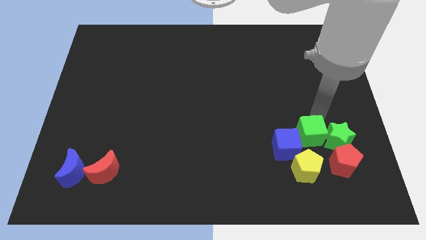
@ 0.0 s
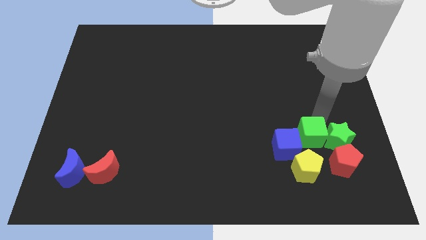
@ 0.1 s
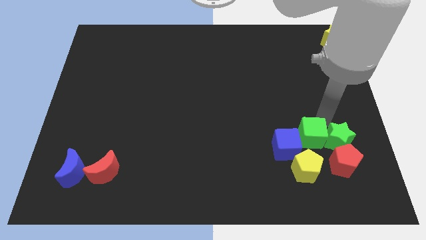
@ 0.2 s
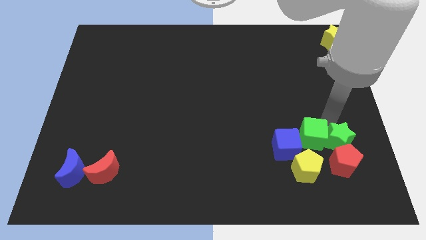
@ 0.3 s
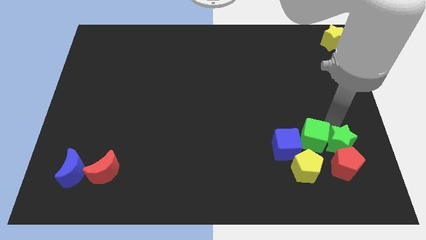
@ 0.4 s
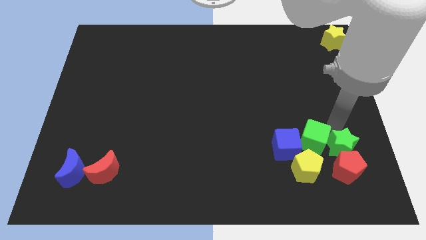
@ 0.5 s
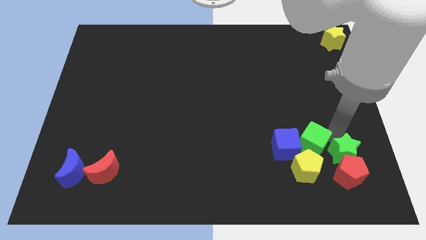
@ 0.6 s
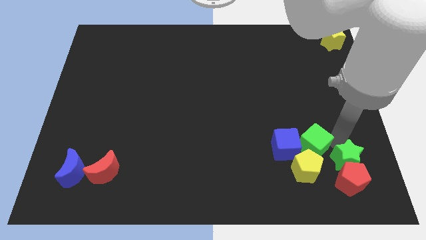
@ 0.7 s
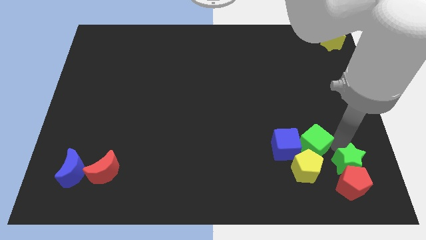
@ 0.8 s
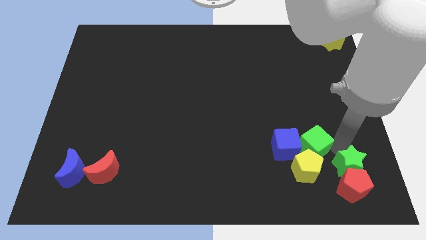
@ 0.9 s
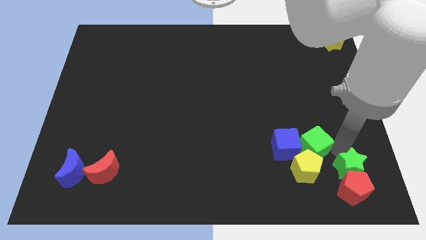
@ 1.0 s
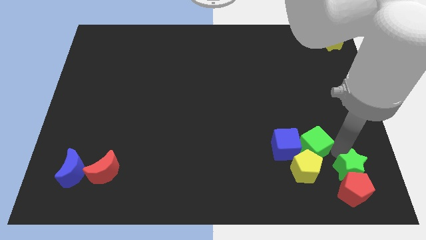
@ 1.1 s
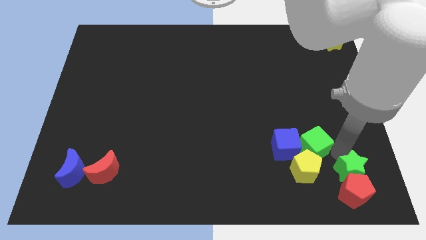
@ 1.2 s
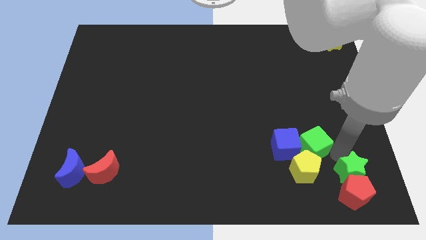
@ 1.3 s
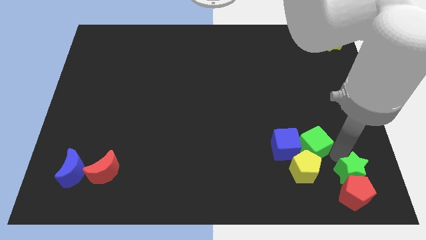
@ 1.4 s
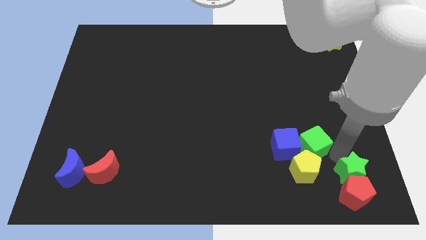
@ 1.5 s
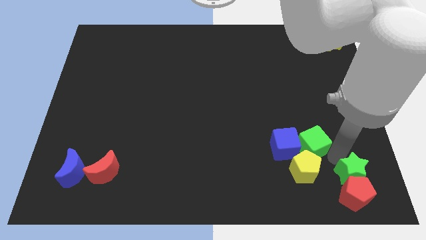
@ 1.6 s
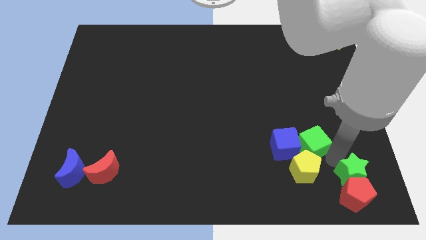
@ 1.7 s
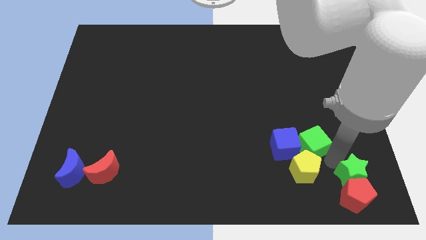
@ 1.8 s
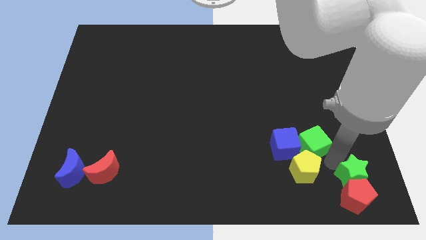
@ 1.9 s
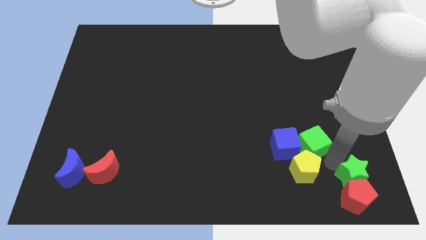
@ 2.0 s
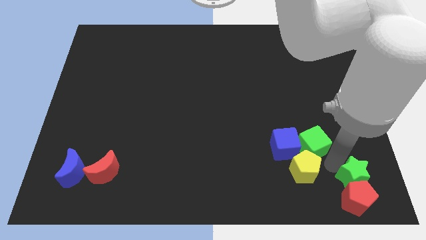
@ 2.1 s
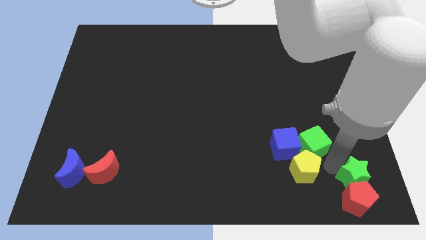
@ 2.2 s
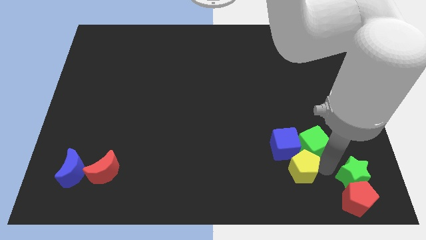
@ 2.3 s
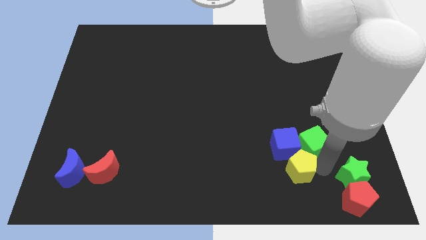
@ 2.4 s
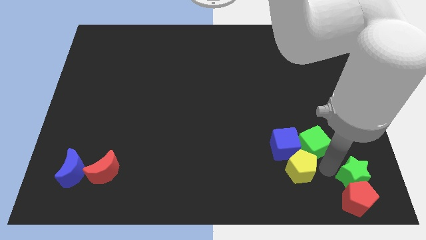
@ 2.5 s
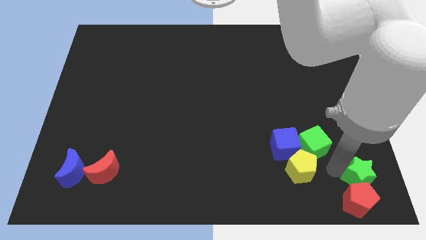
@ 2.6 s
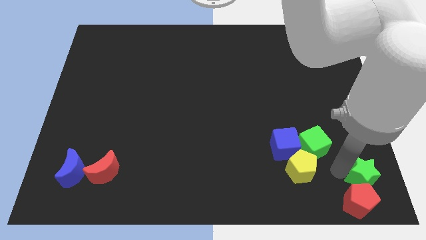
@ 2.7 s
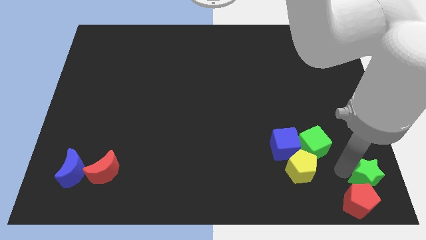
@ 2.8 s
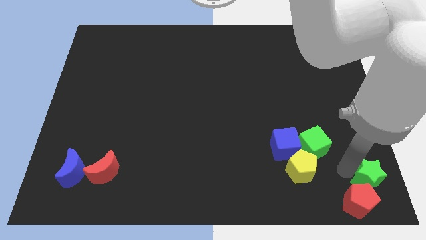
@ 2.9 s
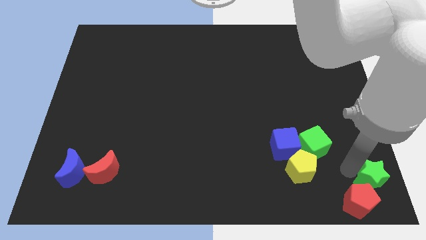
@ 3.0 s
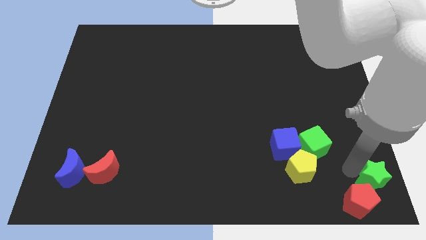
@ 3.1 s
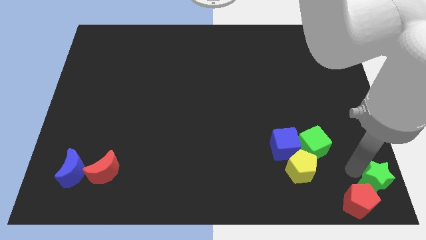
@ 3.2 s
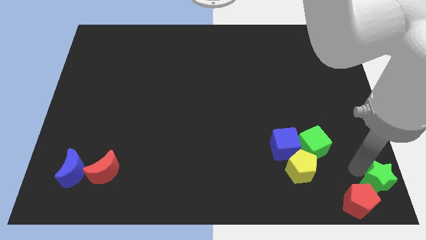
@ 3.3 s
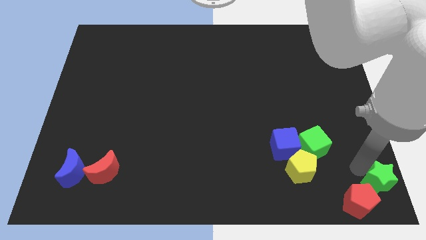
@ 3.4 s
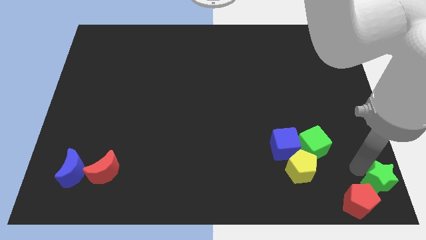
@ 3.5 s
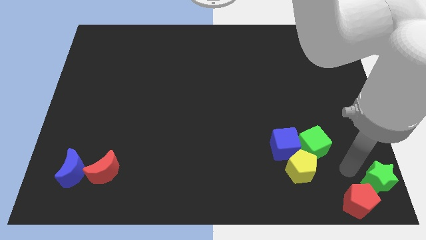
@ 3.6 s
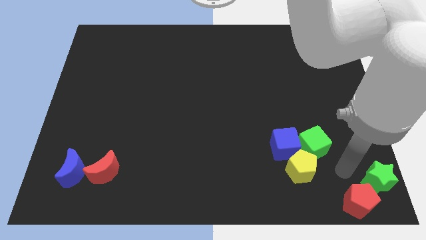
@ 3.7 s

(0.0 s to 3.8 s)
separate the green star and red pentagon to right corner

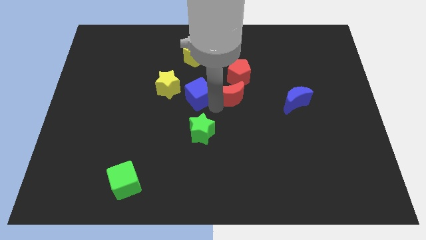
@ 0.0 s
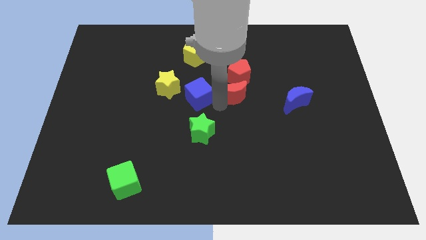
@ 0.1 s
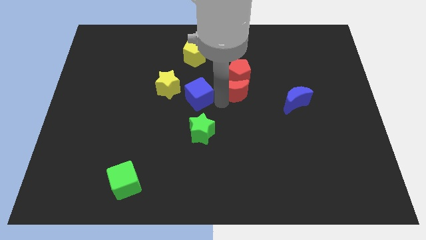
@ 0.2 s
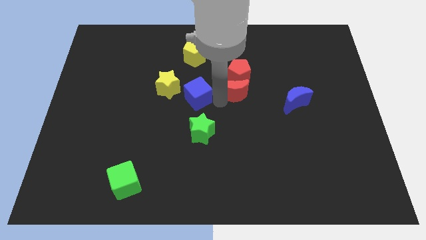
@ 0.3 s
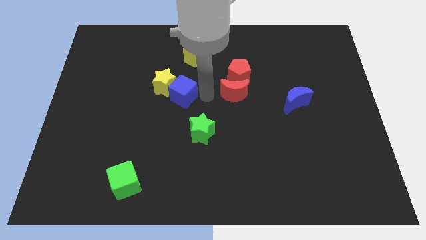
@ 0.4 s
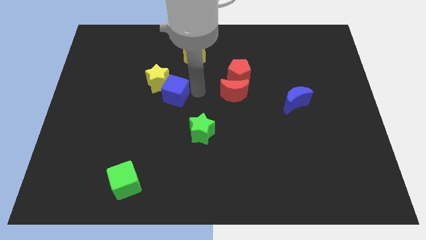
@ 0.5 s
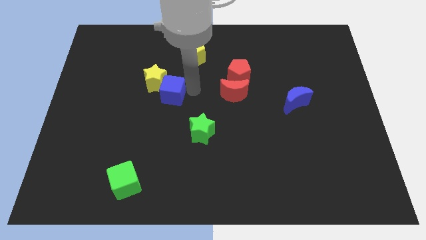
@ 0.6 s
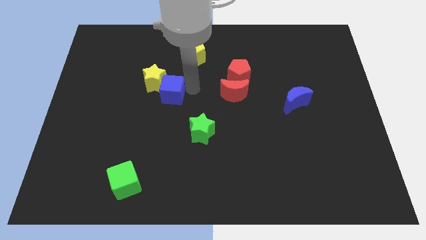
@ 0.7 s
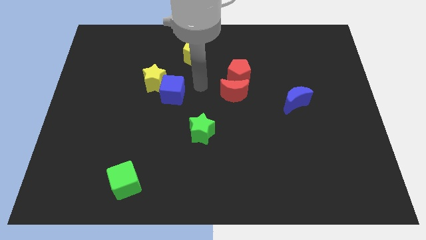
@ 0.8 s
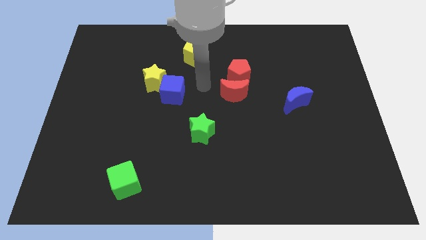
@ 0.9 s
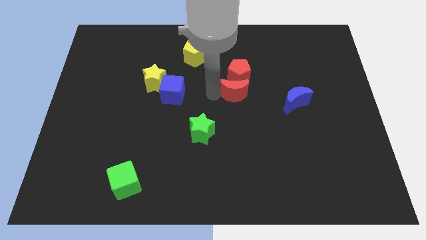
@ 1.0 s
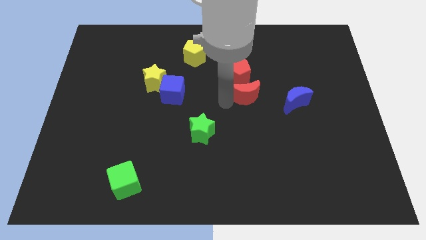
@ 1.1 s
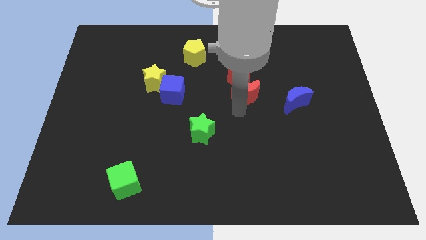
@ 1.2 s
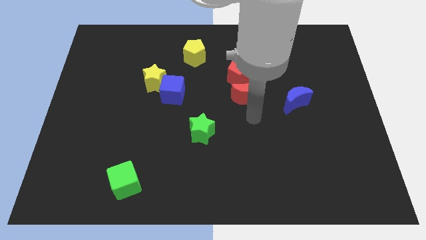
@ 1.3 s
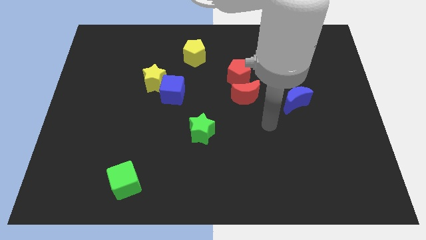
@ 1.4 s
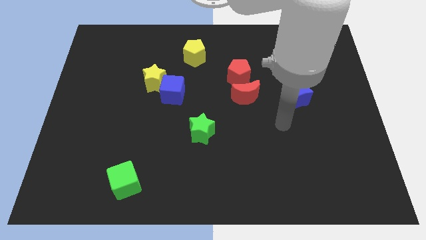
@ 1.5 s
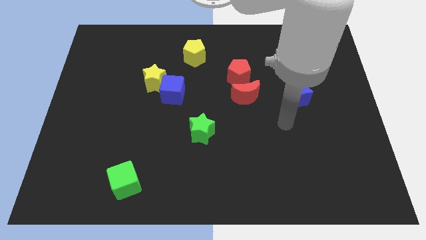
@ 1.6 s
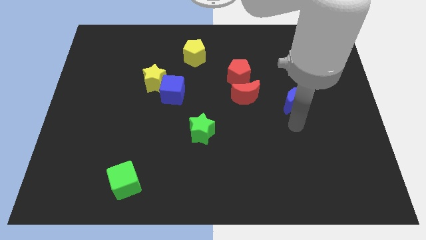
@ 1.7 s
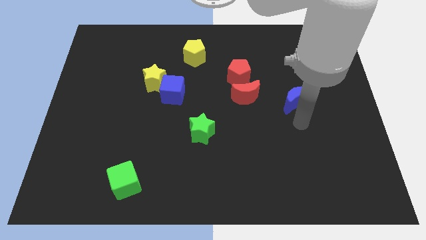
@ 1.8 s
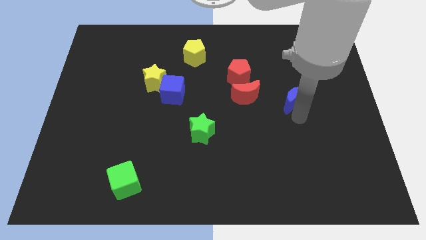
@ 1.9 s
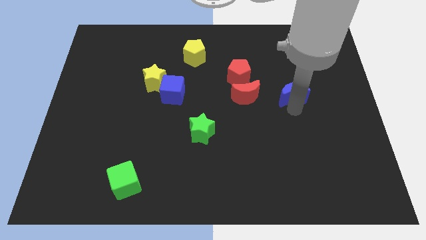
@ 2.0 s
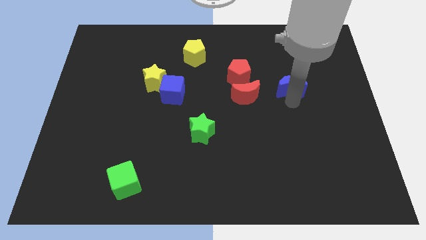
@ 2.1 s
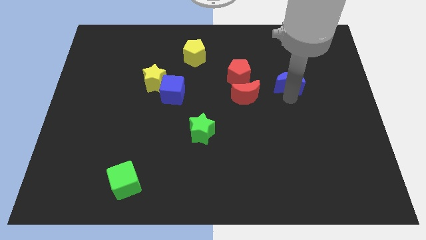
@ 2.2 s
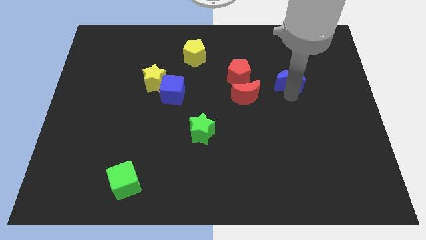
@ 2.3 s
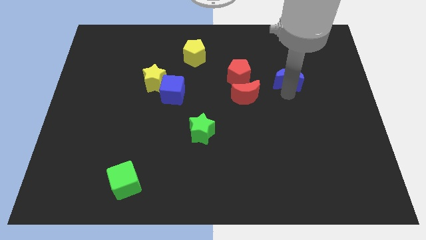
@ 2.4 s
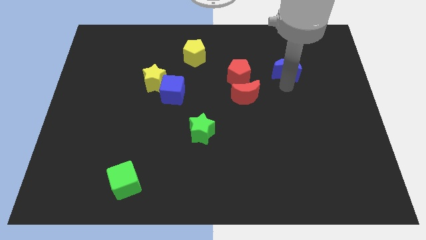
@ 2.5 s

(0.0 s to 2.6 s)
place blue moon parallel to red pentagon

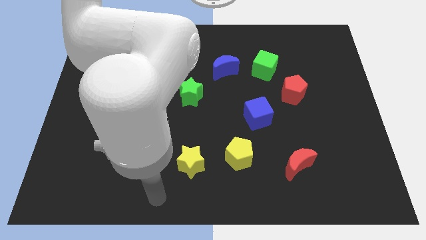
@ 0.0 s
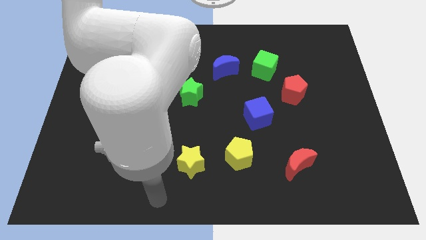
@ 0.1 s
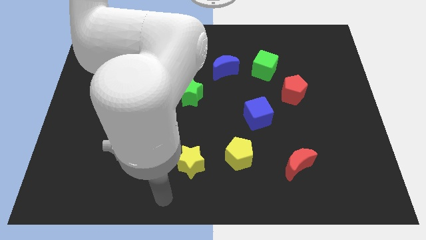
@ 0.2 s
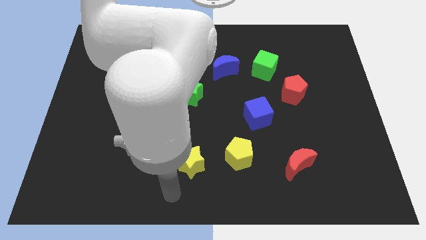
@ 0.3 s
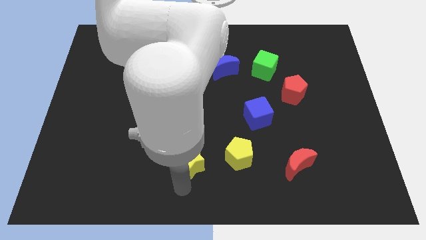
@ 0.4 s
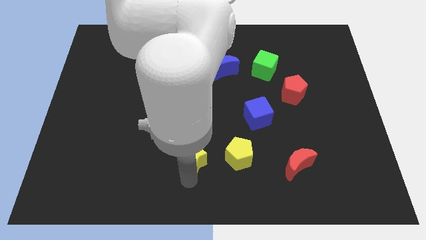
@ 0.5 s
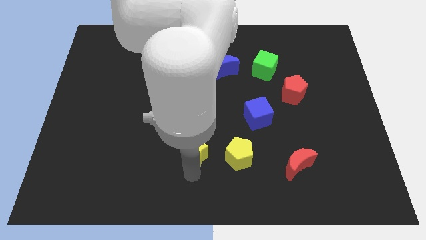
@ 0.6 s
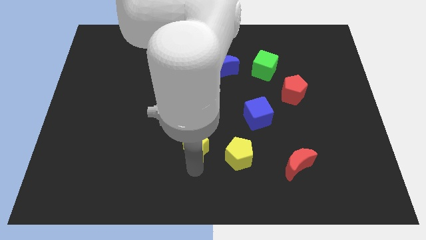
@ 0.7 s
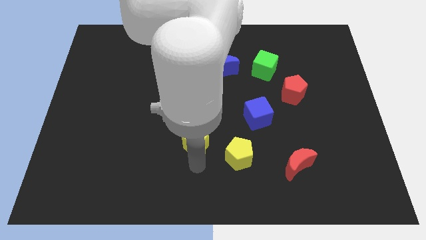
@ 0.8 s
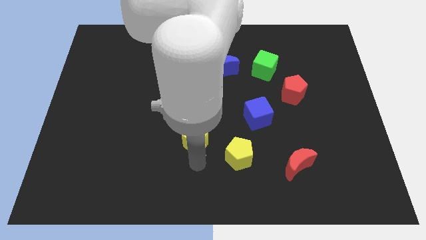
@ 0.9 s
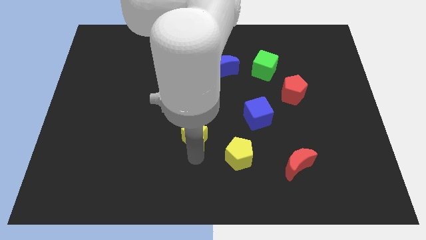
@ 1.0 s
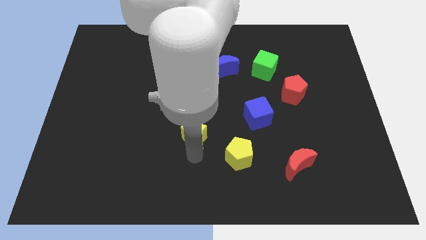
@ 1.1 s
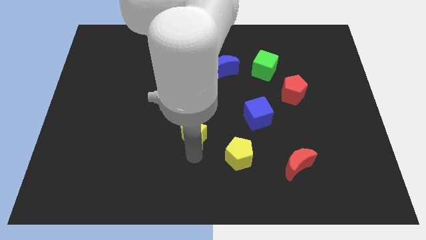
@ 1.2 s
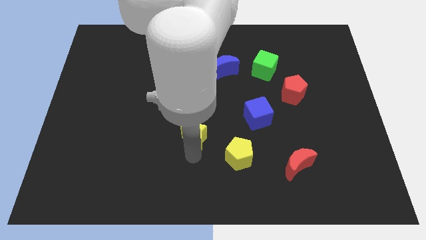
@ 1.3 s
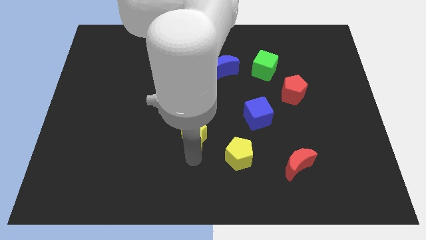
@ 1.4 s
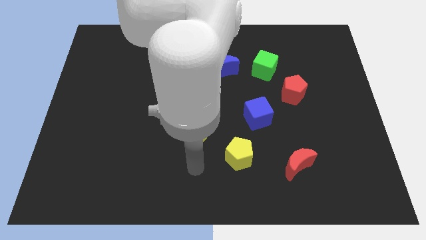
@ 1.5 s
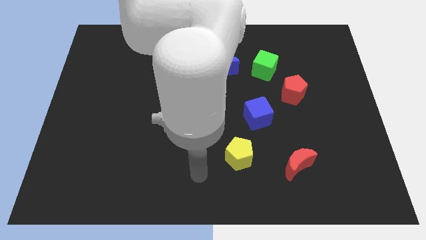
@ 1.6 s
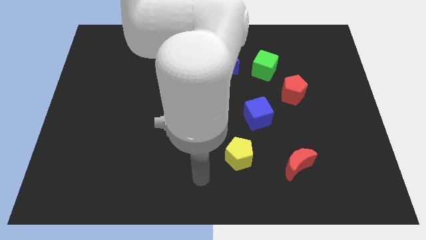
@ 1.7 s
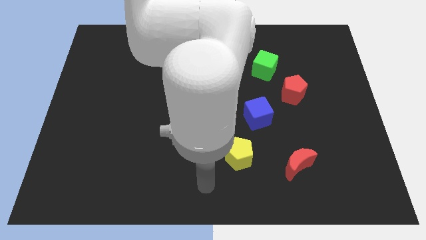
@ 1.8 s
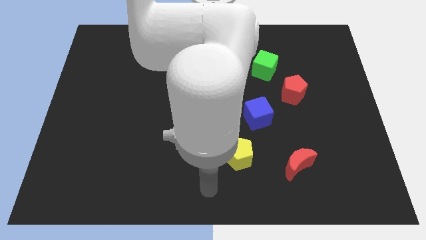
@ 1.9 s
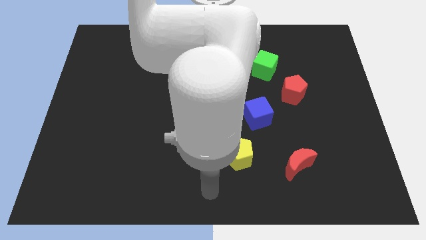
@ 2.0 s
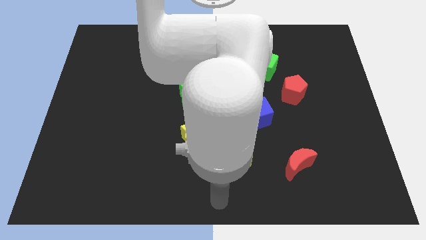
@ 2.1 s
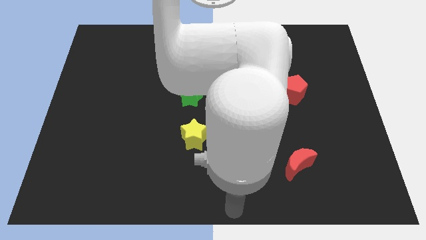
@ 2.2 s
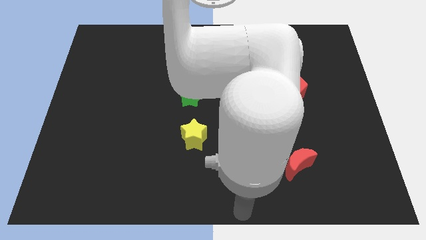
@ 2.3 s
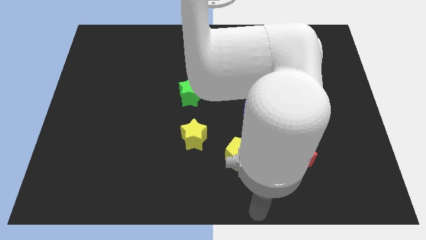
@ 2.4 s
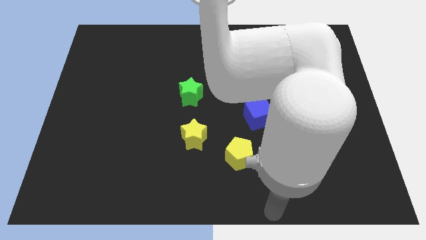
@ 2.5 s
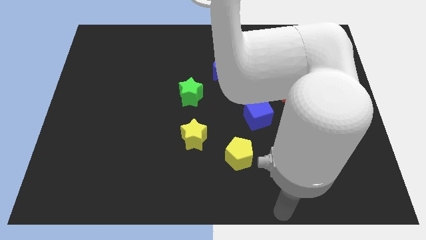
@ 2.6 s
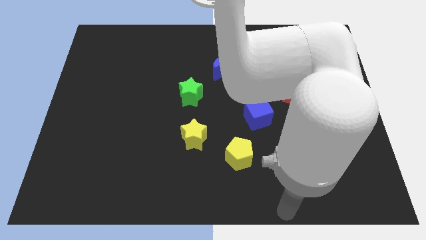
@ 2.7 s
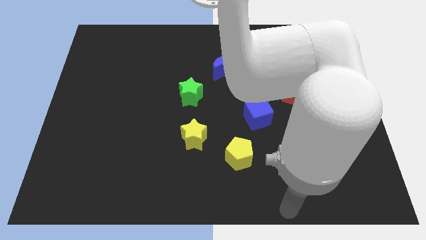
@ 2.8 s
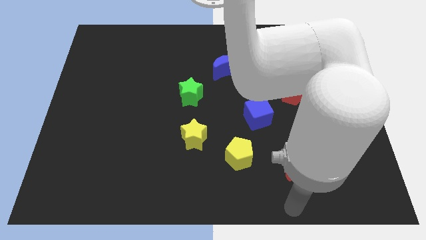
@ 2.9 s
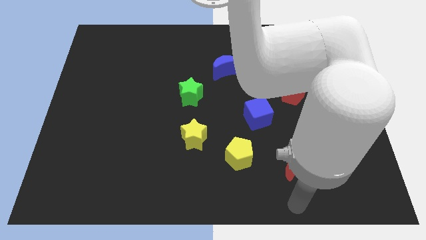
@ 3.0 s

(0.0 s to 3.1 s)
place the yellow star at the bottom of the green star vertically
